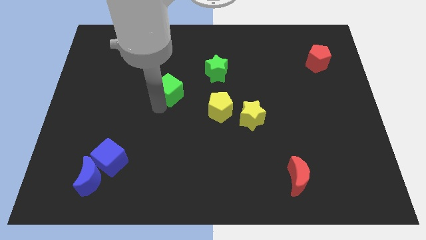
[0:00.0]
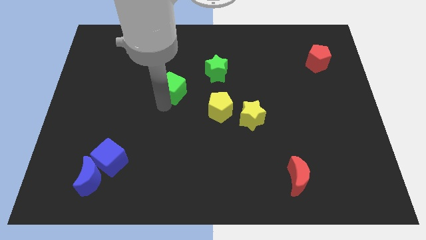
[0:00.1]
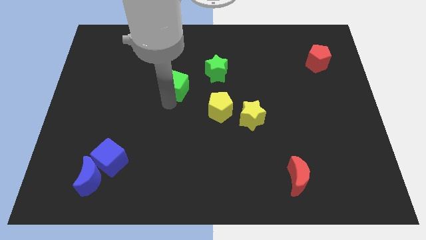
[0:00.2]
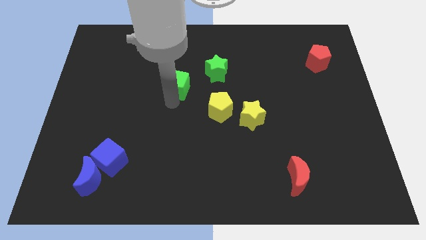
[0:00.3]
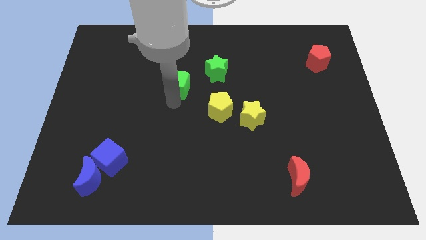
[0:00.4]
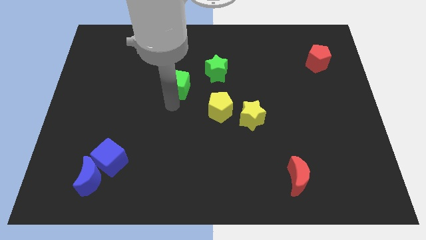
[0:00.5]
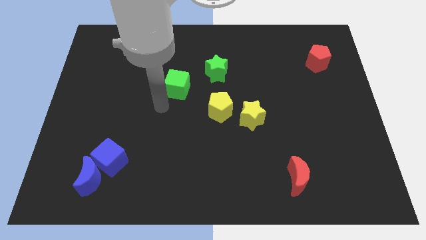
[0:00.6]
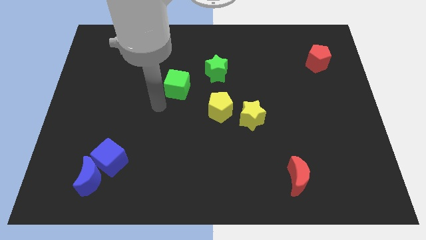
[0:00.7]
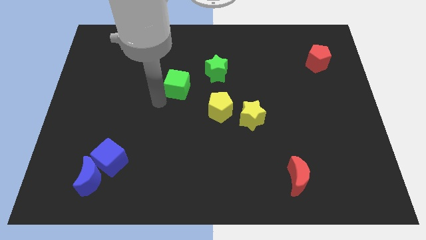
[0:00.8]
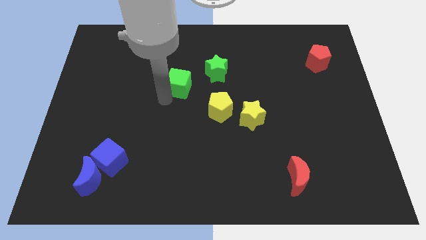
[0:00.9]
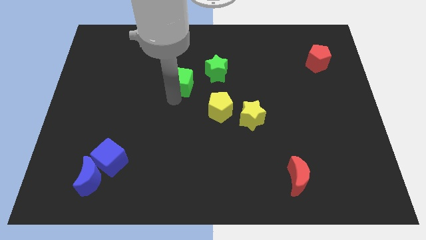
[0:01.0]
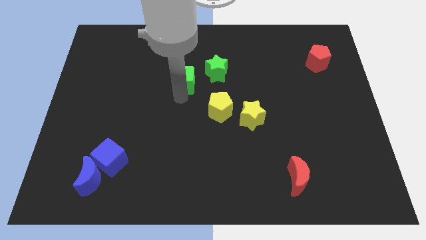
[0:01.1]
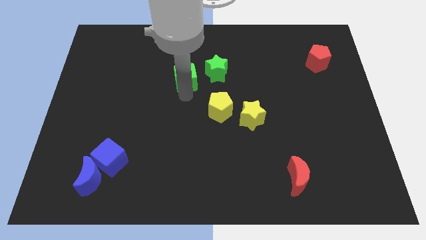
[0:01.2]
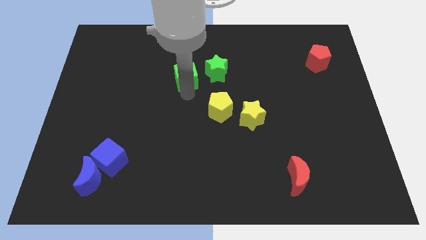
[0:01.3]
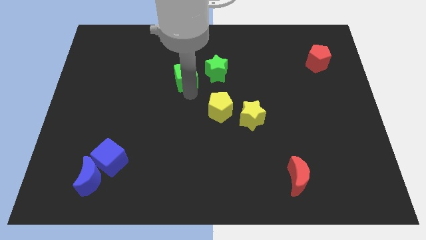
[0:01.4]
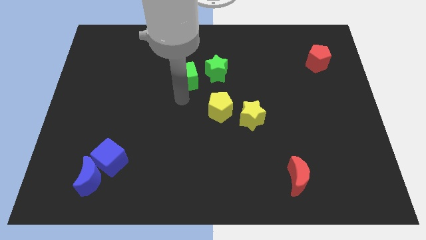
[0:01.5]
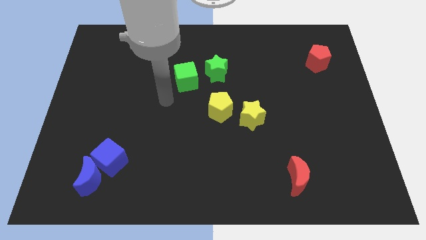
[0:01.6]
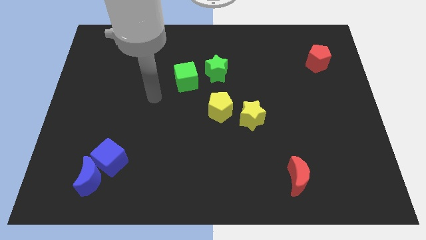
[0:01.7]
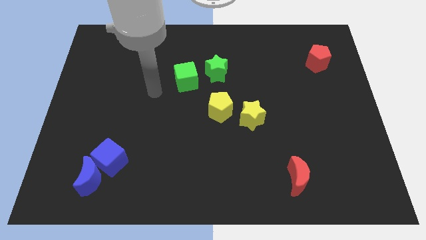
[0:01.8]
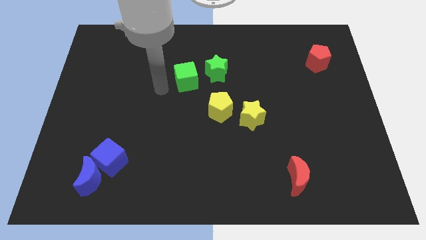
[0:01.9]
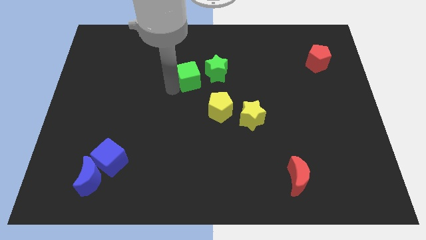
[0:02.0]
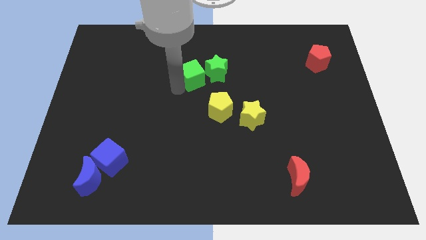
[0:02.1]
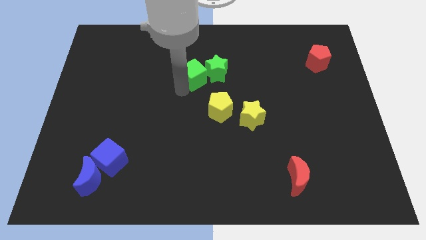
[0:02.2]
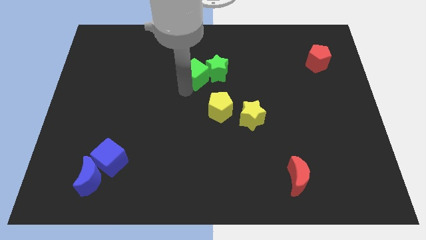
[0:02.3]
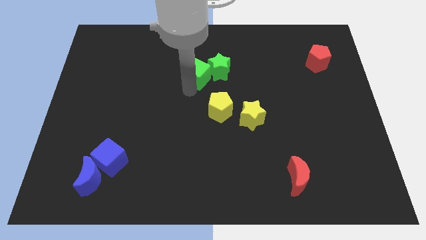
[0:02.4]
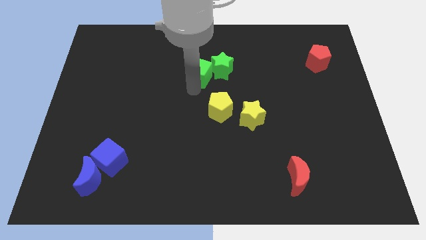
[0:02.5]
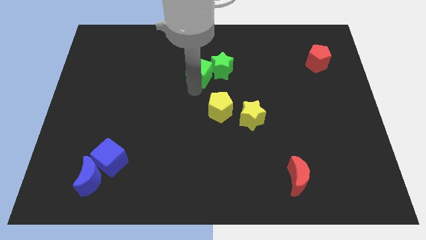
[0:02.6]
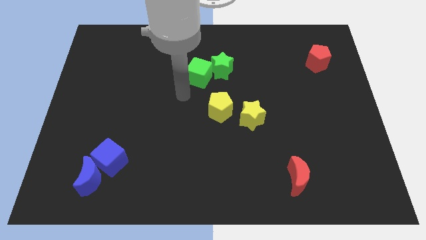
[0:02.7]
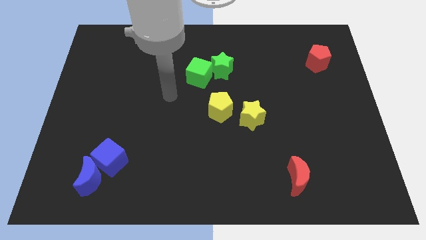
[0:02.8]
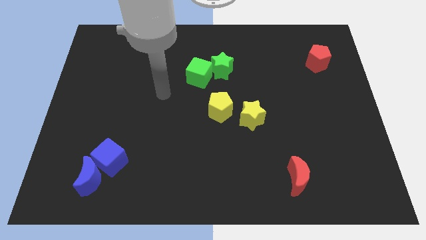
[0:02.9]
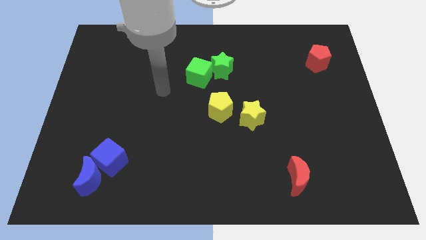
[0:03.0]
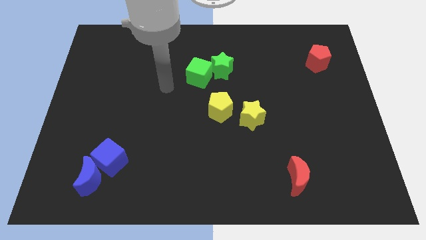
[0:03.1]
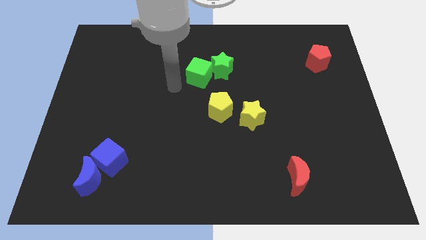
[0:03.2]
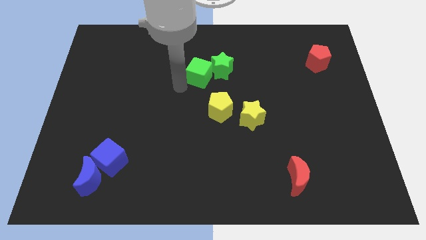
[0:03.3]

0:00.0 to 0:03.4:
push the green cube into the green star

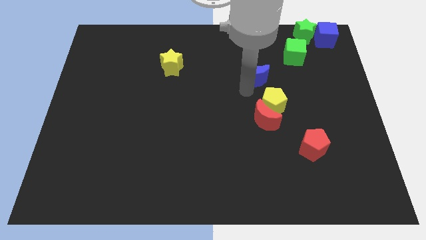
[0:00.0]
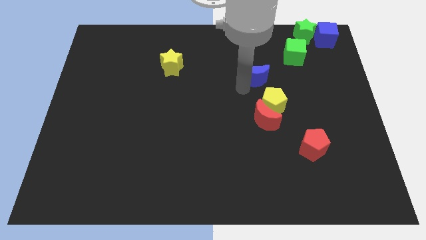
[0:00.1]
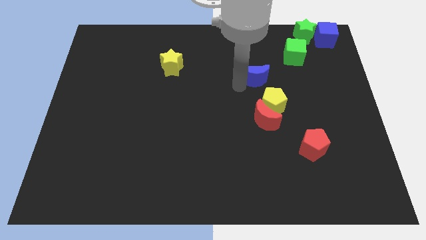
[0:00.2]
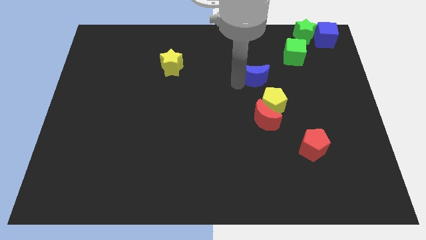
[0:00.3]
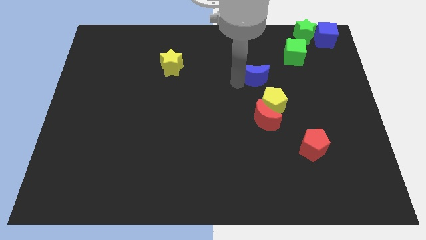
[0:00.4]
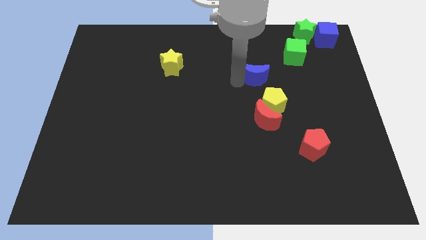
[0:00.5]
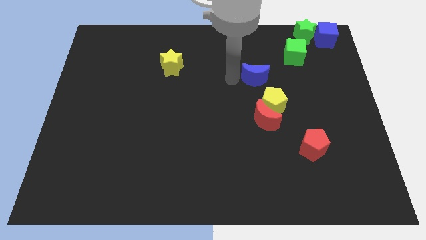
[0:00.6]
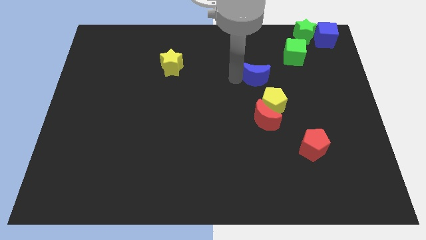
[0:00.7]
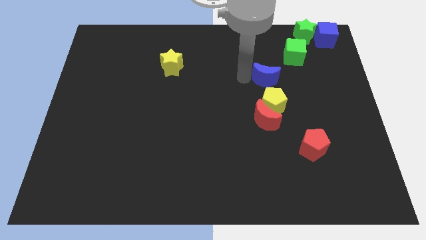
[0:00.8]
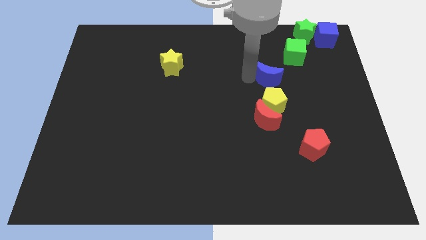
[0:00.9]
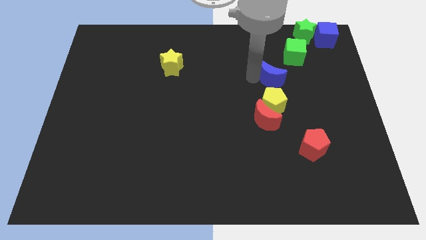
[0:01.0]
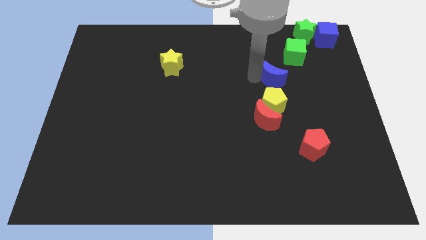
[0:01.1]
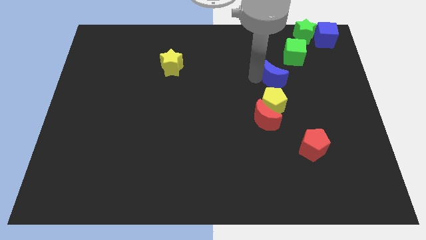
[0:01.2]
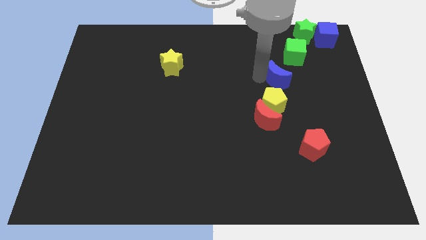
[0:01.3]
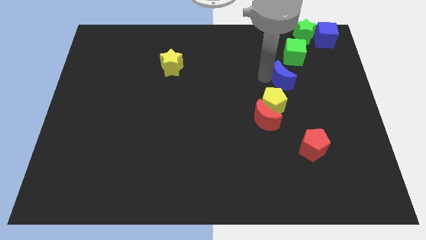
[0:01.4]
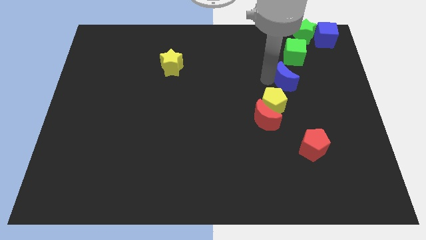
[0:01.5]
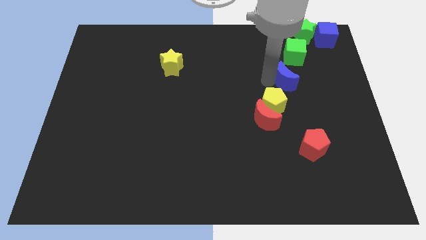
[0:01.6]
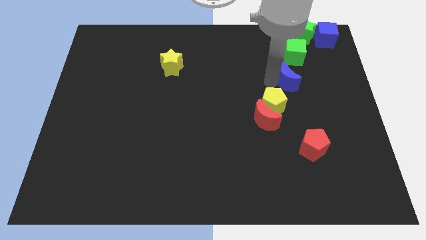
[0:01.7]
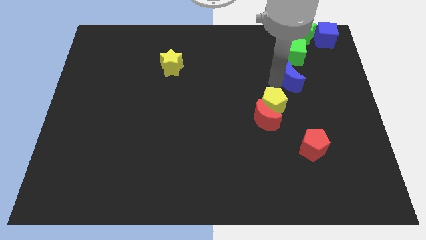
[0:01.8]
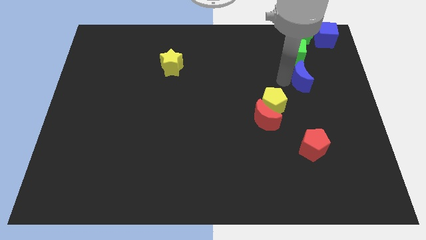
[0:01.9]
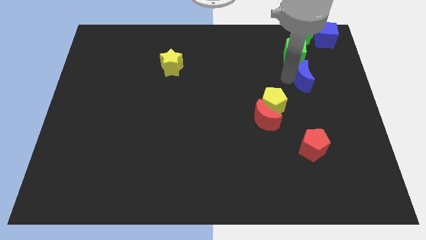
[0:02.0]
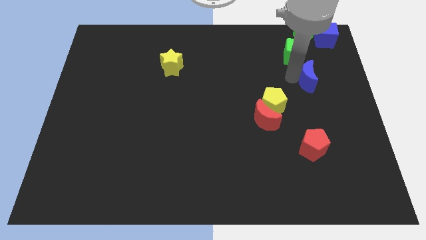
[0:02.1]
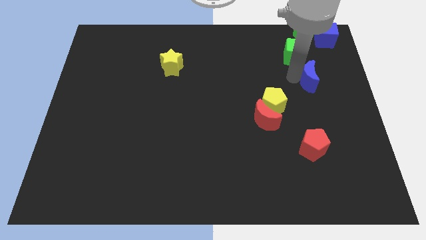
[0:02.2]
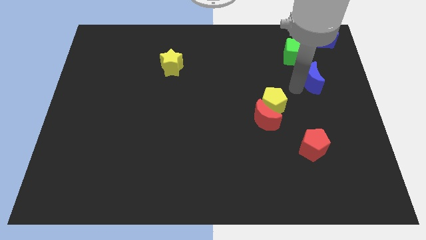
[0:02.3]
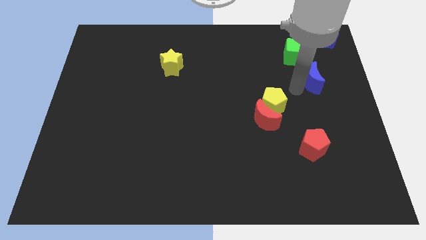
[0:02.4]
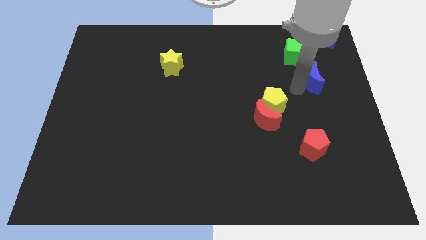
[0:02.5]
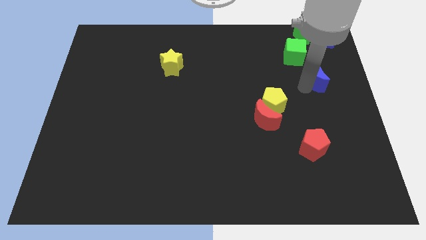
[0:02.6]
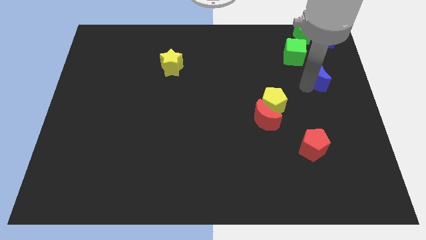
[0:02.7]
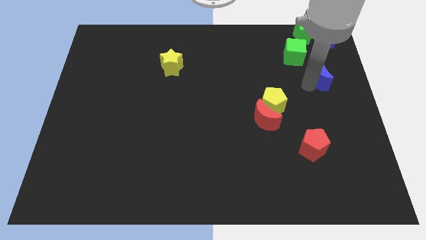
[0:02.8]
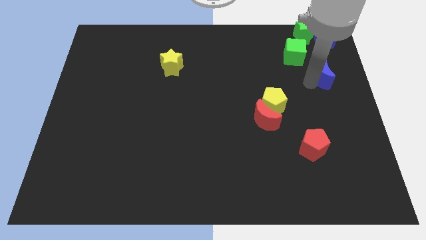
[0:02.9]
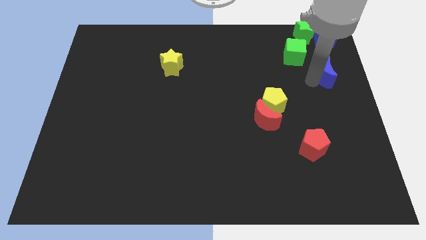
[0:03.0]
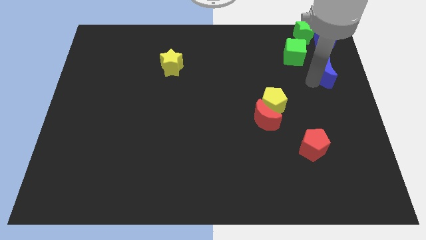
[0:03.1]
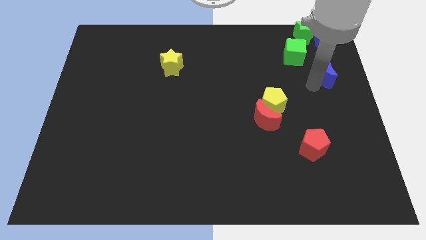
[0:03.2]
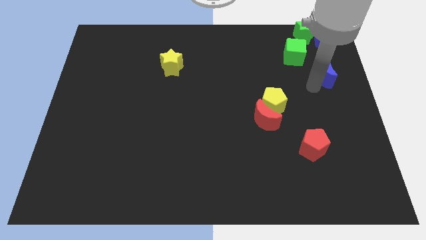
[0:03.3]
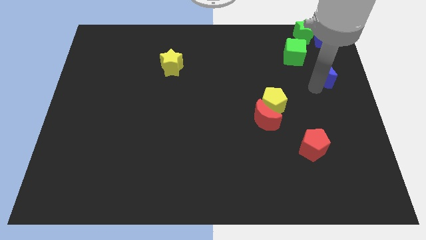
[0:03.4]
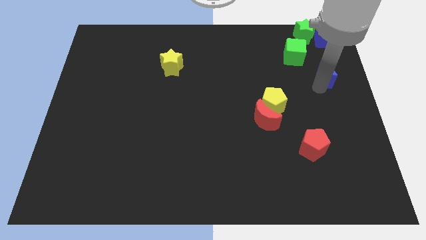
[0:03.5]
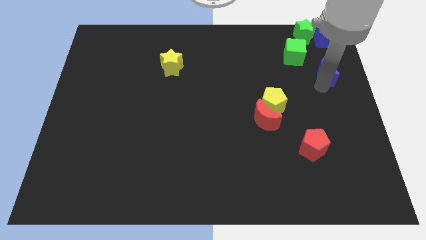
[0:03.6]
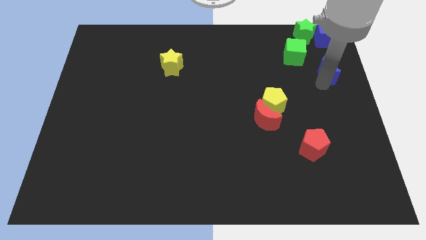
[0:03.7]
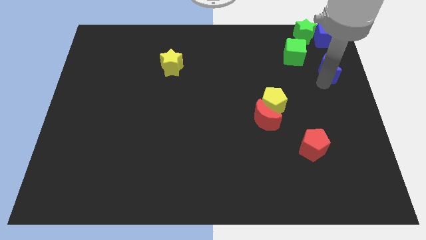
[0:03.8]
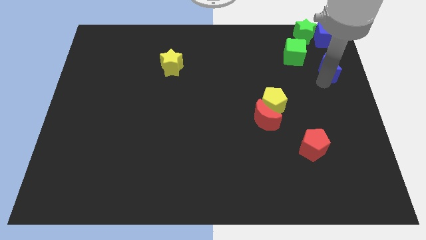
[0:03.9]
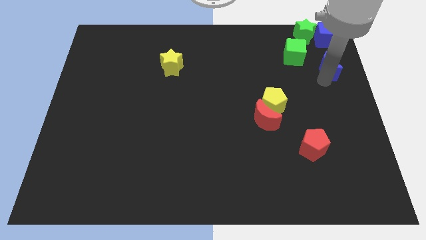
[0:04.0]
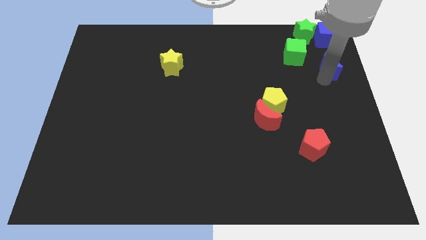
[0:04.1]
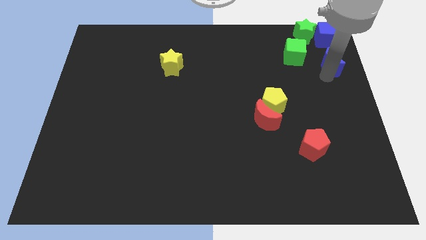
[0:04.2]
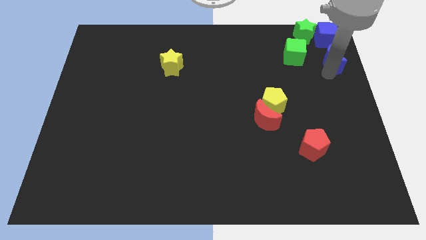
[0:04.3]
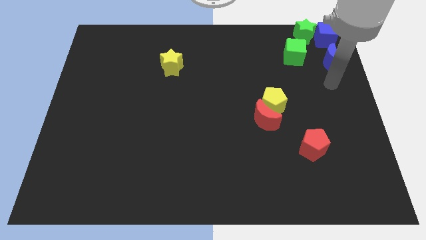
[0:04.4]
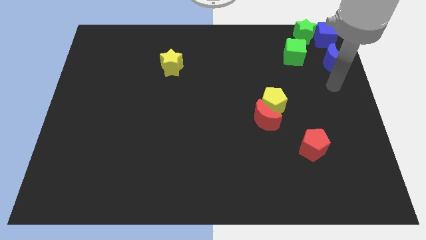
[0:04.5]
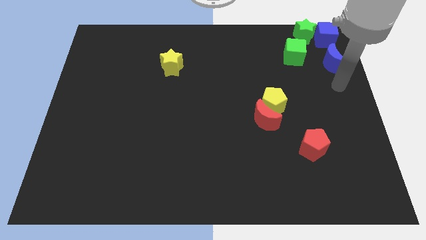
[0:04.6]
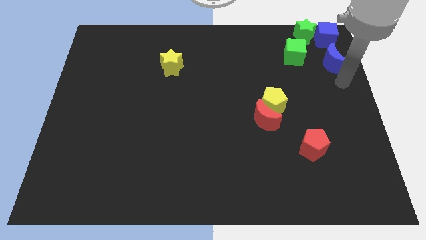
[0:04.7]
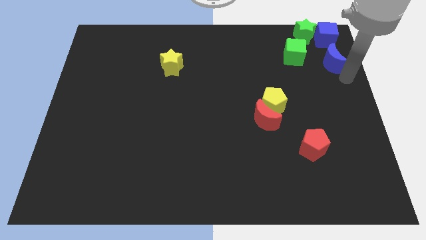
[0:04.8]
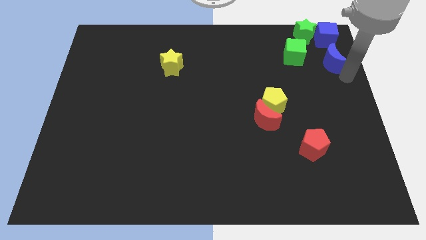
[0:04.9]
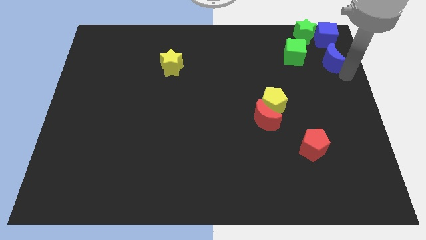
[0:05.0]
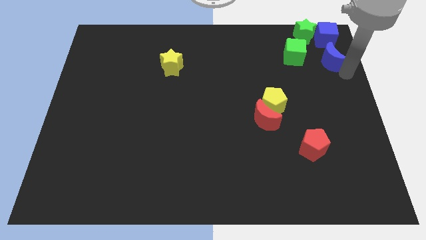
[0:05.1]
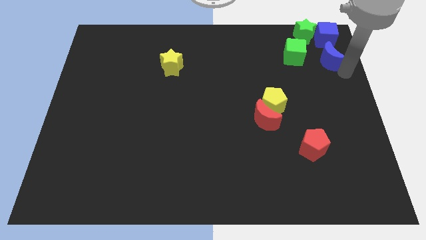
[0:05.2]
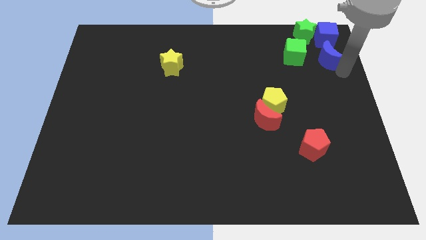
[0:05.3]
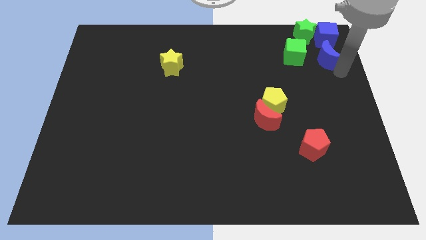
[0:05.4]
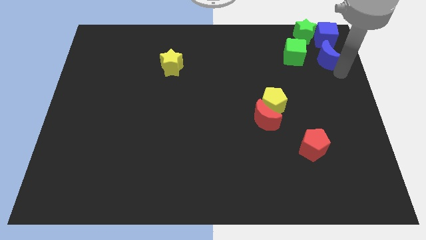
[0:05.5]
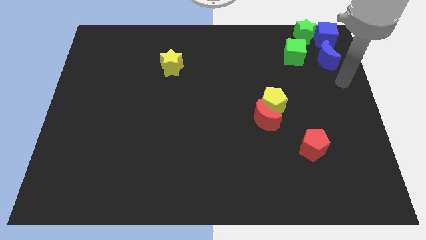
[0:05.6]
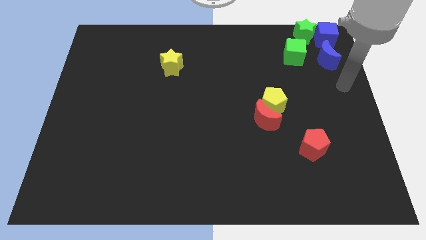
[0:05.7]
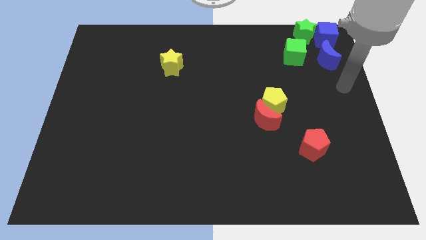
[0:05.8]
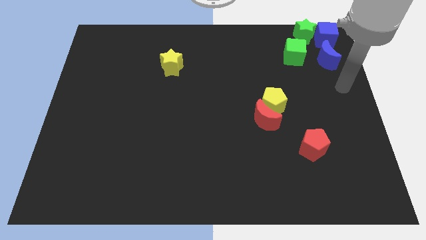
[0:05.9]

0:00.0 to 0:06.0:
move the blue moon below the blue cube
